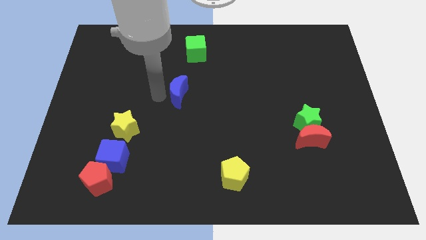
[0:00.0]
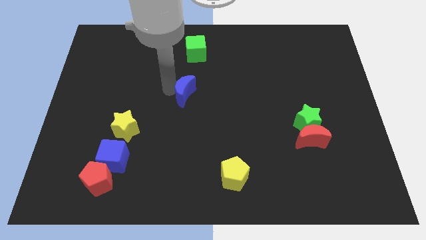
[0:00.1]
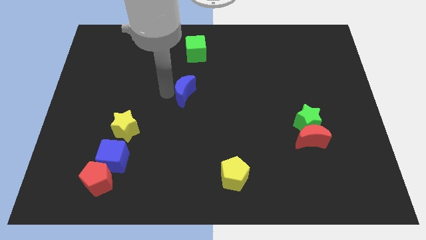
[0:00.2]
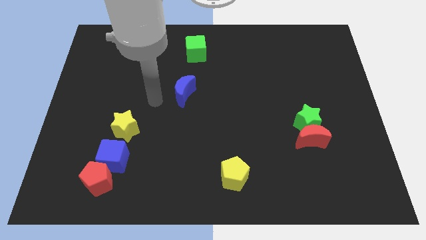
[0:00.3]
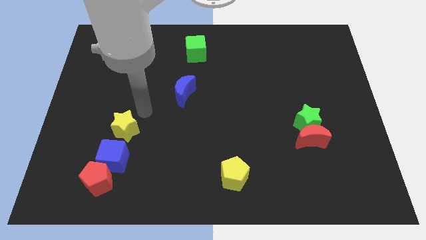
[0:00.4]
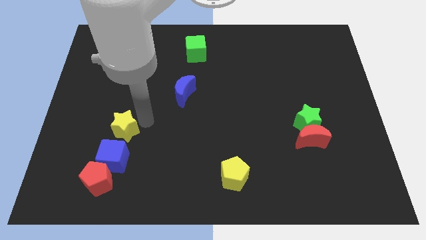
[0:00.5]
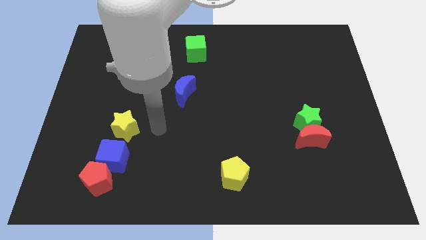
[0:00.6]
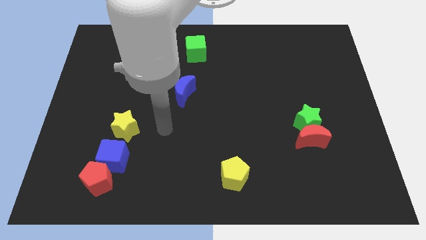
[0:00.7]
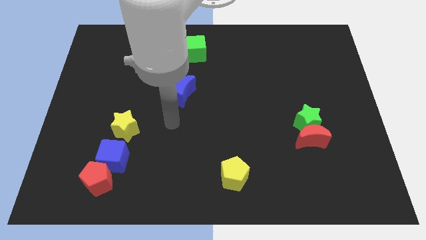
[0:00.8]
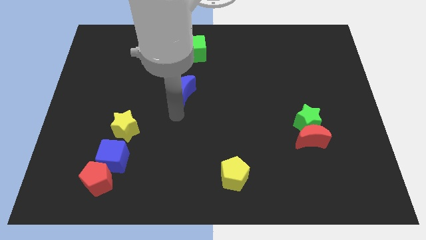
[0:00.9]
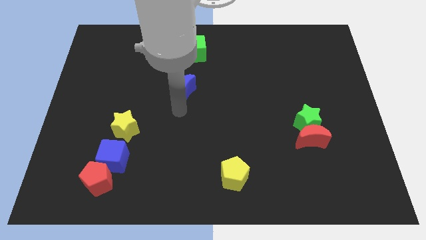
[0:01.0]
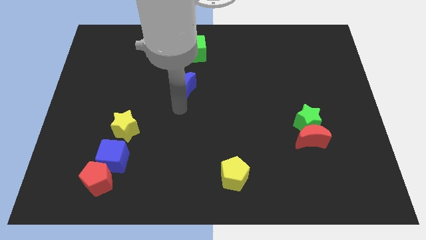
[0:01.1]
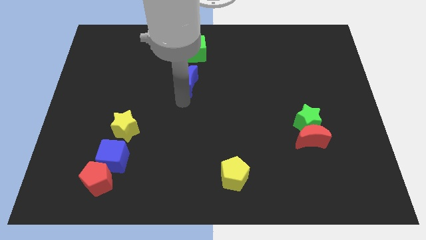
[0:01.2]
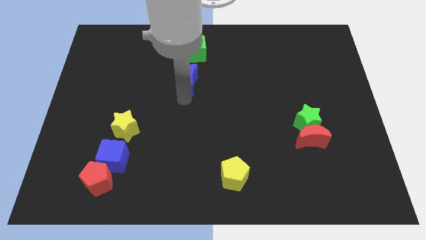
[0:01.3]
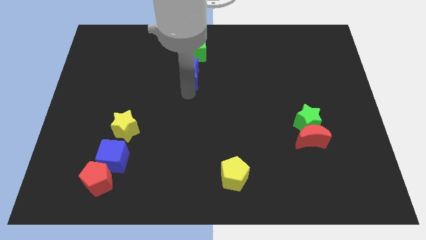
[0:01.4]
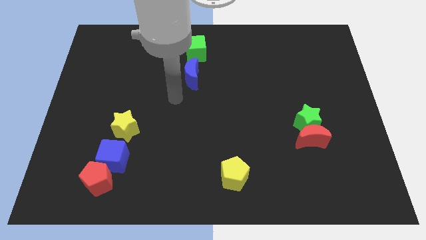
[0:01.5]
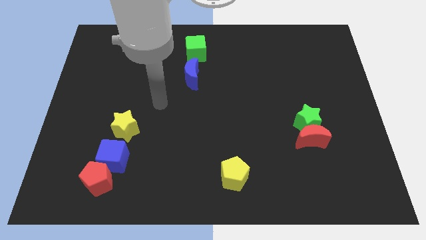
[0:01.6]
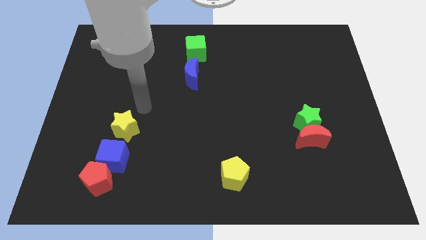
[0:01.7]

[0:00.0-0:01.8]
push the blue crescent to the bottom of the green cube

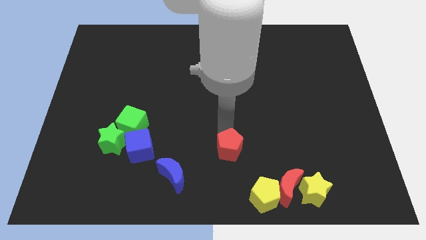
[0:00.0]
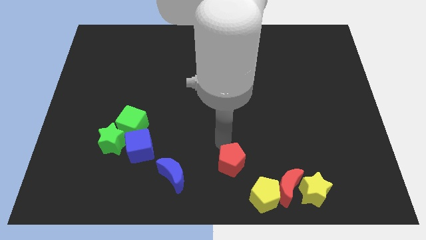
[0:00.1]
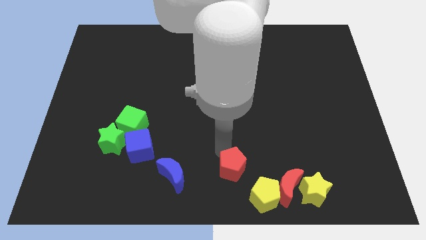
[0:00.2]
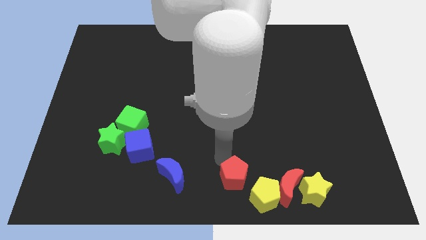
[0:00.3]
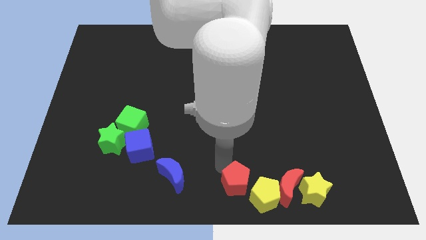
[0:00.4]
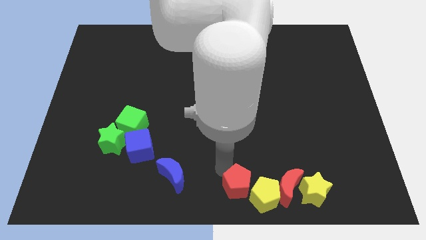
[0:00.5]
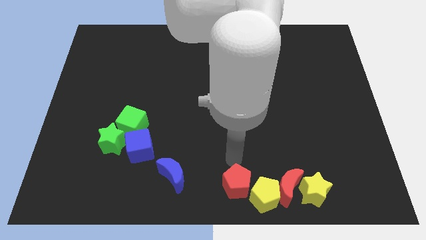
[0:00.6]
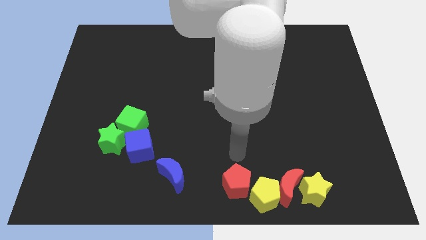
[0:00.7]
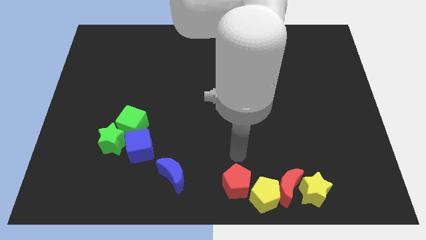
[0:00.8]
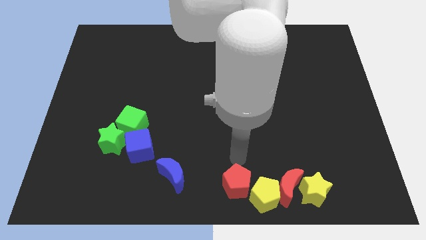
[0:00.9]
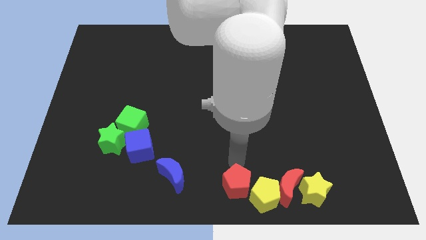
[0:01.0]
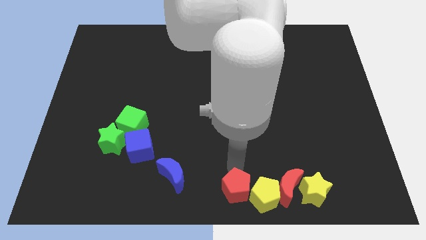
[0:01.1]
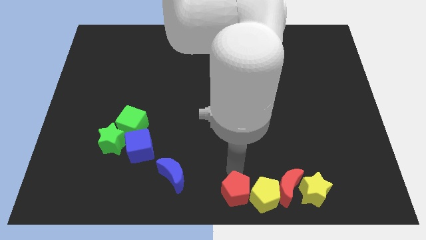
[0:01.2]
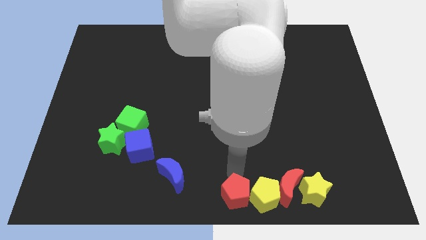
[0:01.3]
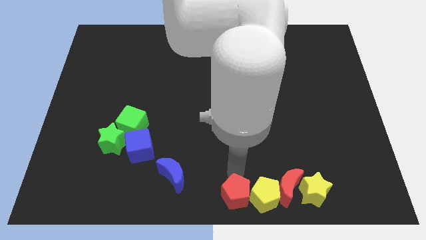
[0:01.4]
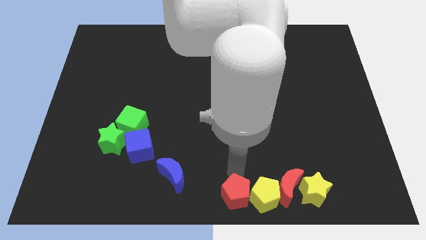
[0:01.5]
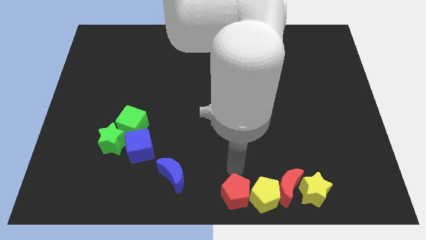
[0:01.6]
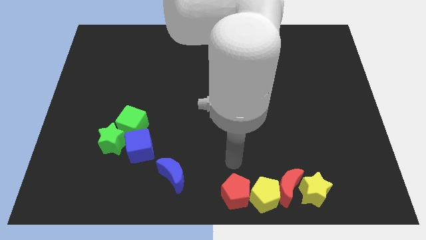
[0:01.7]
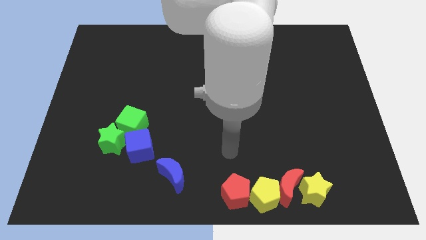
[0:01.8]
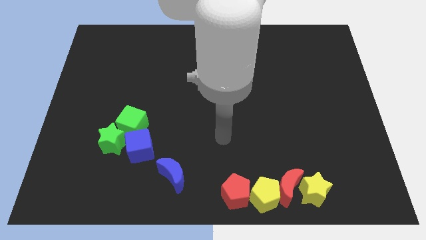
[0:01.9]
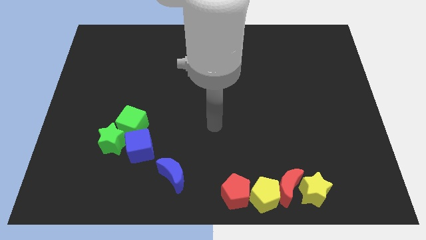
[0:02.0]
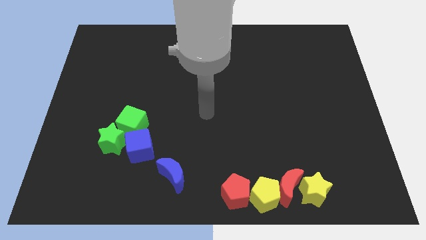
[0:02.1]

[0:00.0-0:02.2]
push red pentagon to the left of the yellow pentagon

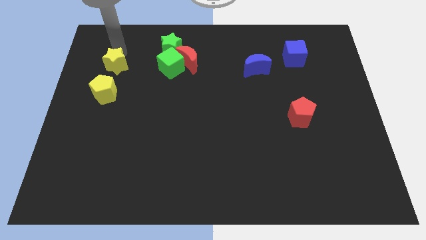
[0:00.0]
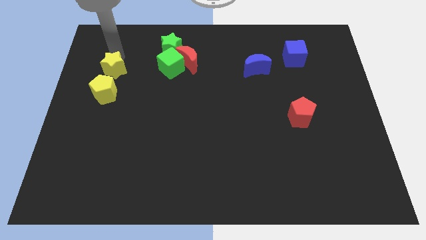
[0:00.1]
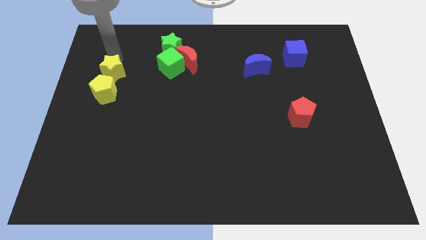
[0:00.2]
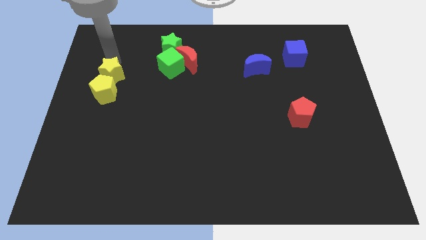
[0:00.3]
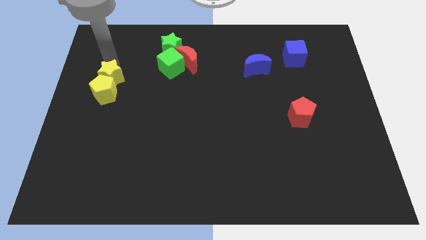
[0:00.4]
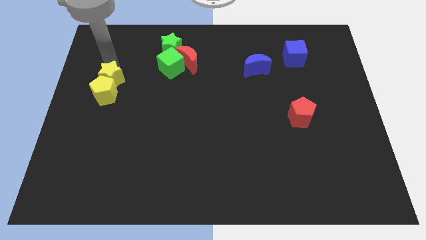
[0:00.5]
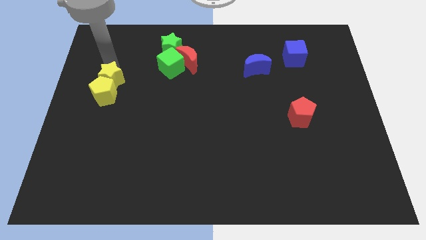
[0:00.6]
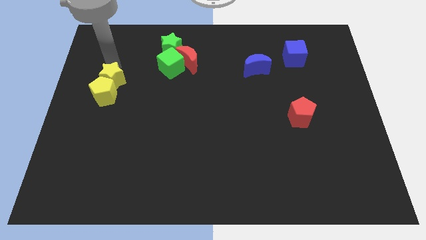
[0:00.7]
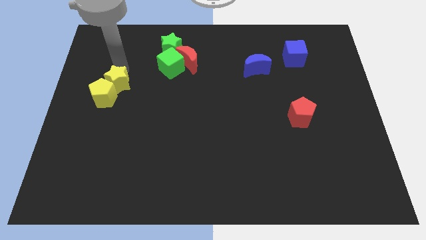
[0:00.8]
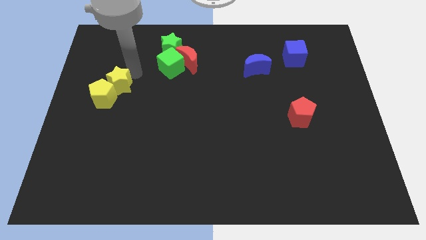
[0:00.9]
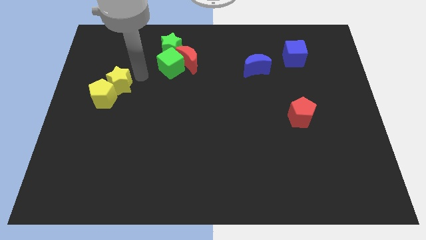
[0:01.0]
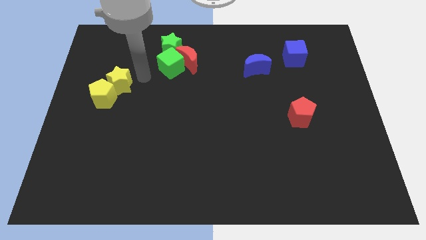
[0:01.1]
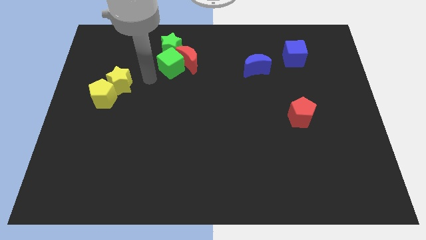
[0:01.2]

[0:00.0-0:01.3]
move the yellow star into the yellow pentagon

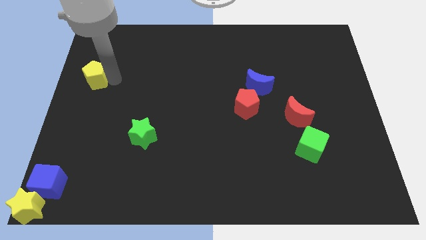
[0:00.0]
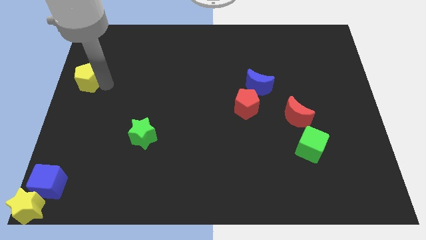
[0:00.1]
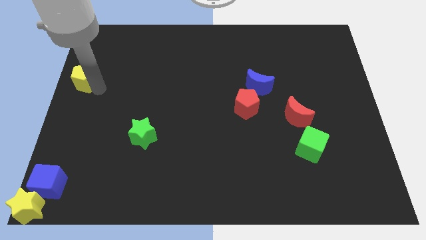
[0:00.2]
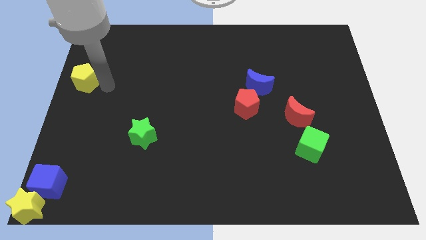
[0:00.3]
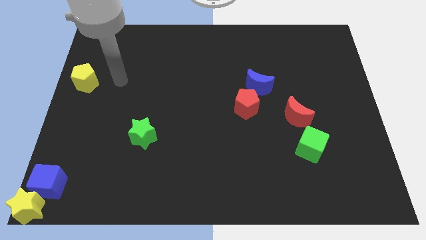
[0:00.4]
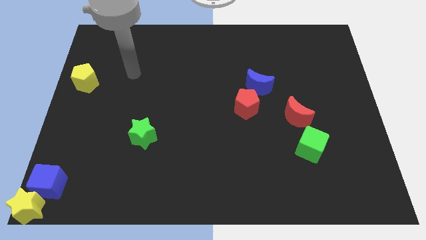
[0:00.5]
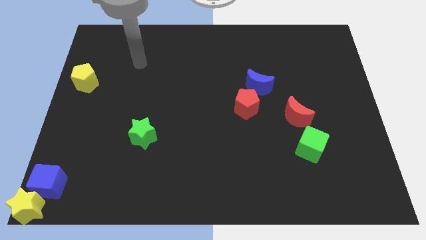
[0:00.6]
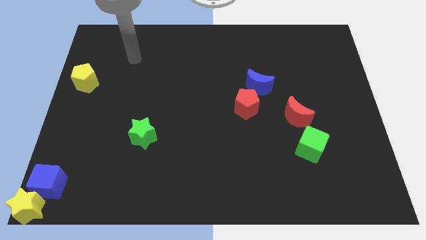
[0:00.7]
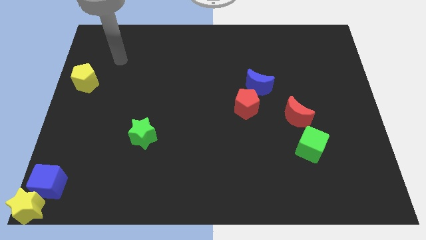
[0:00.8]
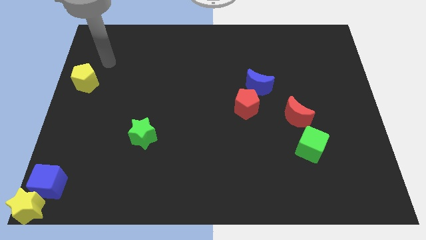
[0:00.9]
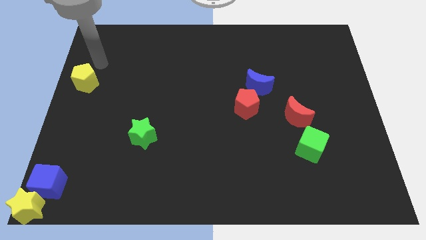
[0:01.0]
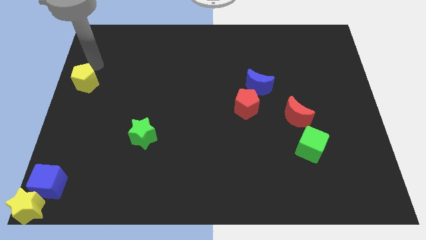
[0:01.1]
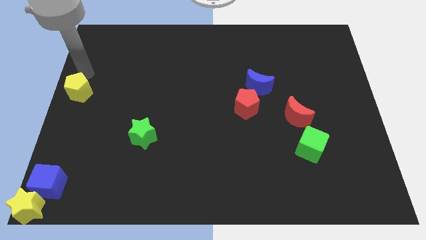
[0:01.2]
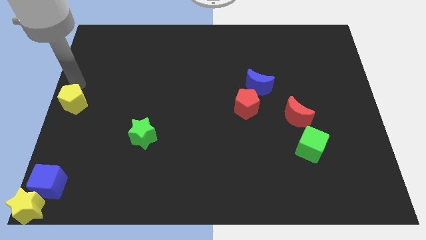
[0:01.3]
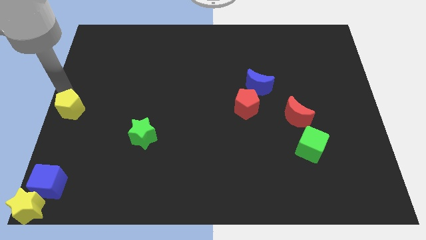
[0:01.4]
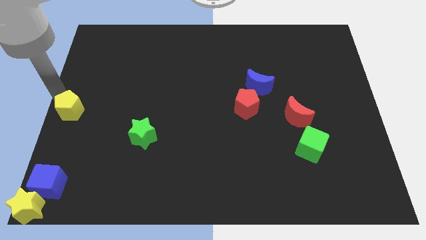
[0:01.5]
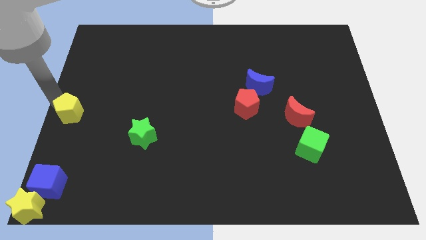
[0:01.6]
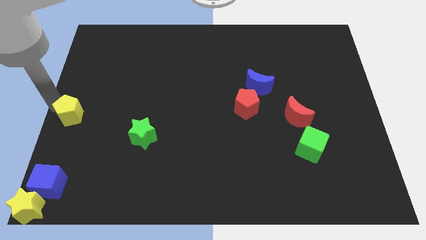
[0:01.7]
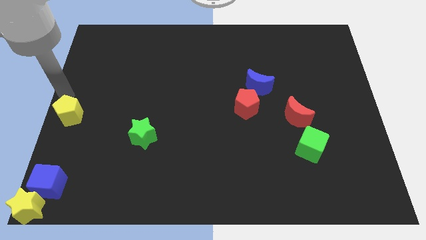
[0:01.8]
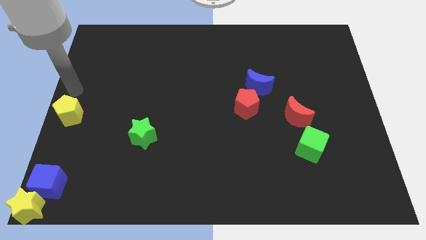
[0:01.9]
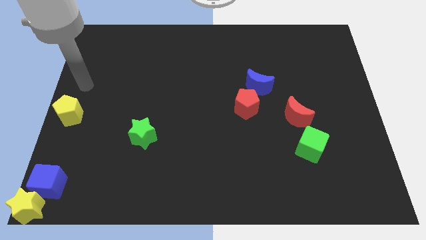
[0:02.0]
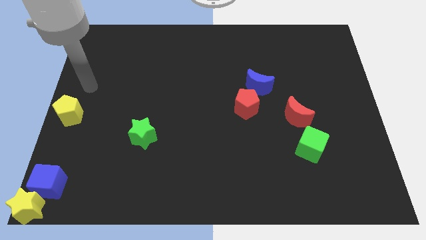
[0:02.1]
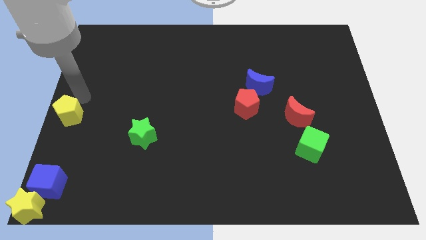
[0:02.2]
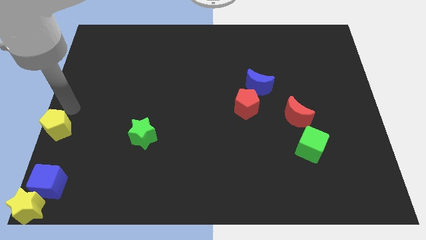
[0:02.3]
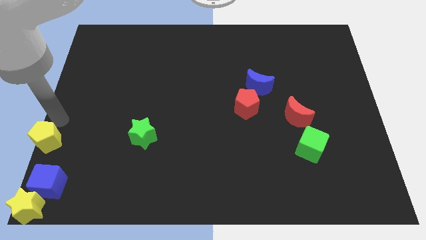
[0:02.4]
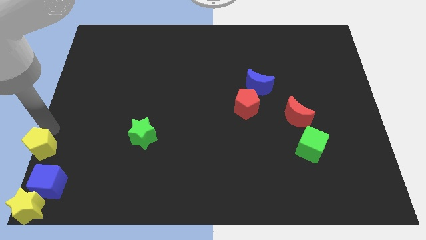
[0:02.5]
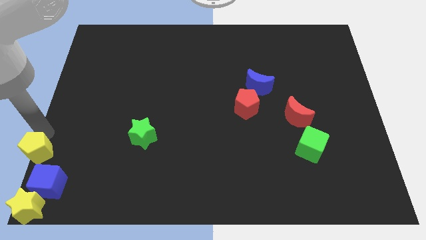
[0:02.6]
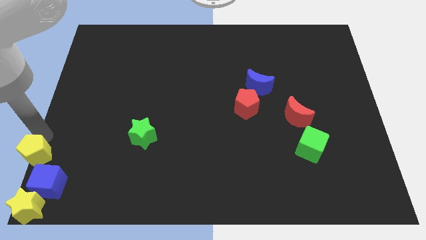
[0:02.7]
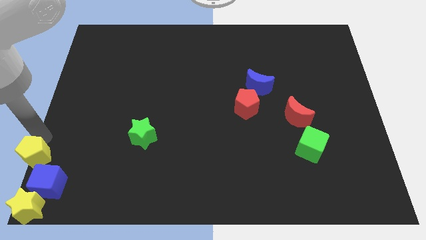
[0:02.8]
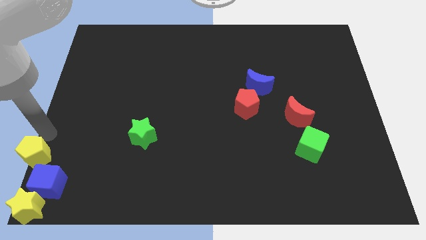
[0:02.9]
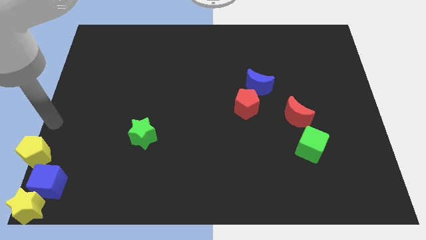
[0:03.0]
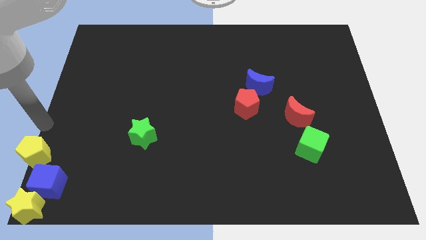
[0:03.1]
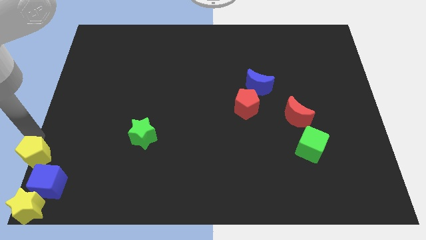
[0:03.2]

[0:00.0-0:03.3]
place yellow pentagon at the top of the blue cube

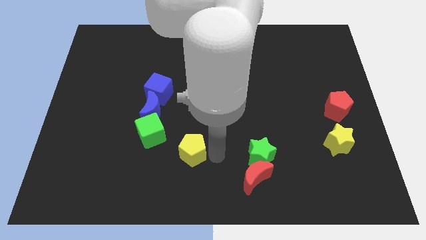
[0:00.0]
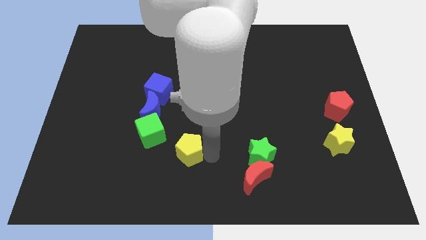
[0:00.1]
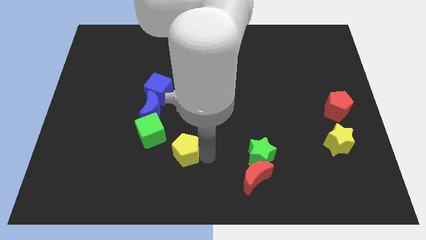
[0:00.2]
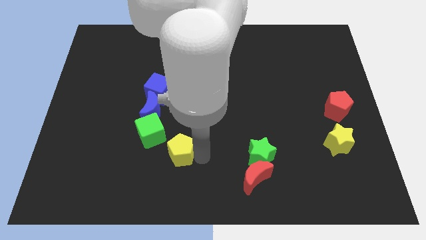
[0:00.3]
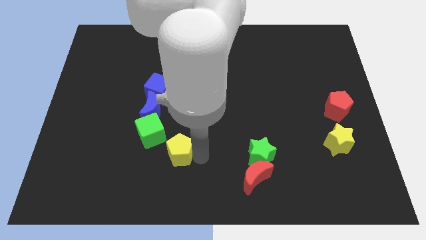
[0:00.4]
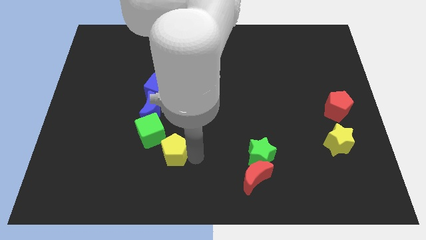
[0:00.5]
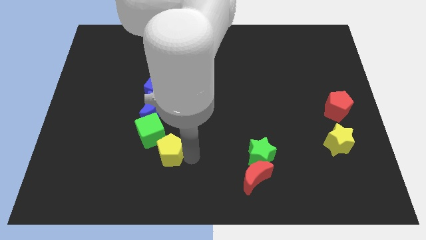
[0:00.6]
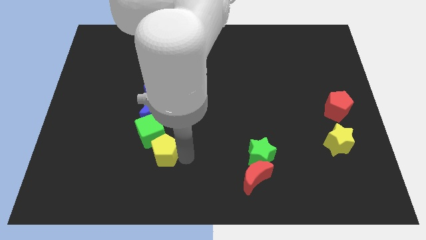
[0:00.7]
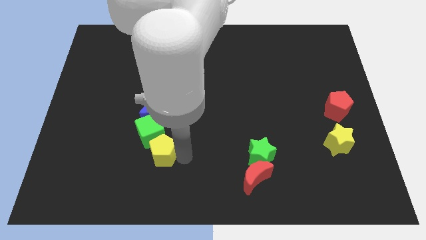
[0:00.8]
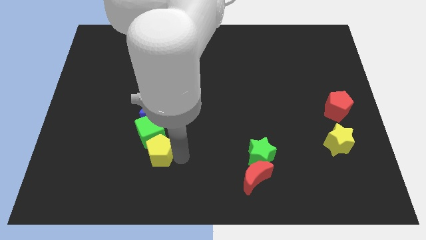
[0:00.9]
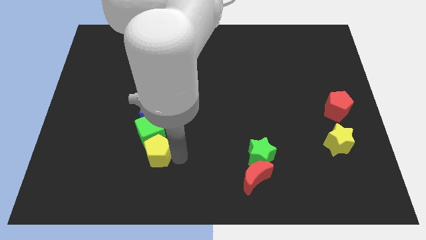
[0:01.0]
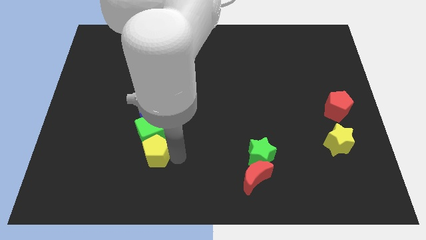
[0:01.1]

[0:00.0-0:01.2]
place the yellow pentagon at the bottom of green cube
